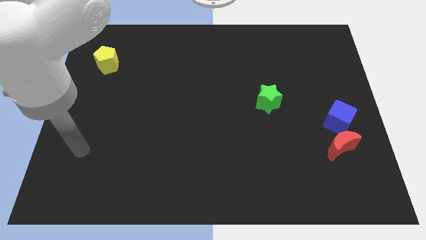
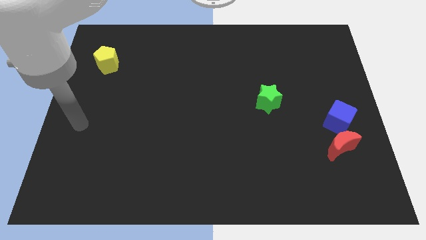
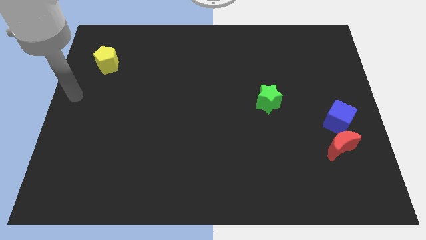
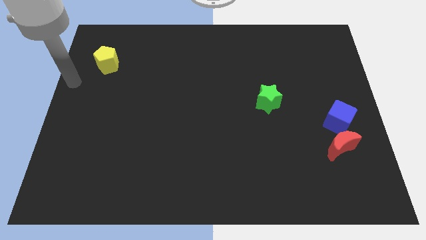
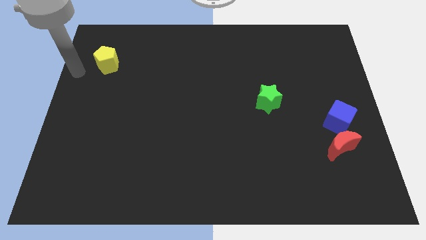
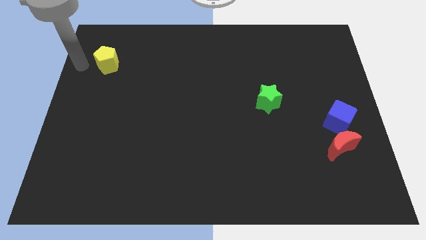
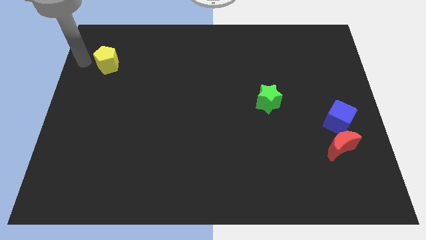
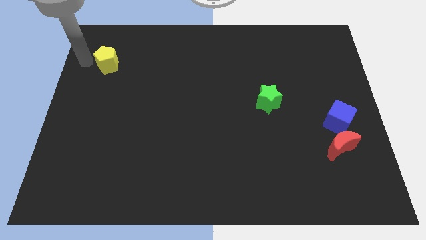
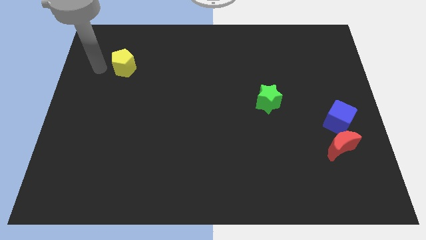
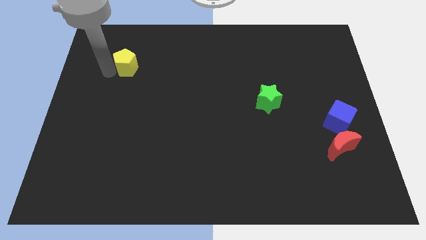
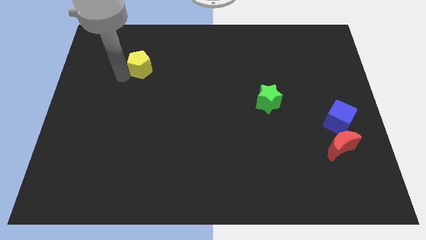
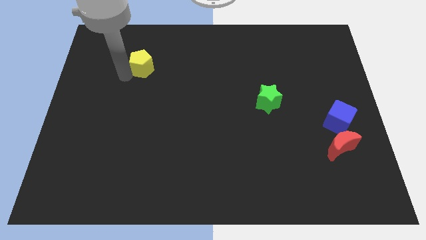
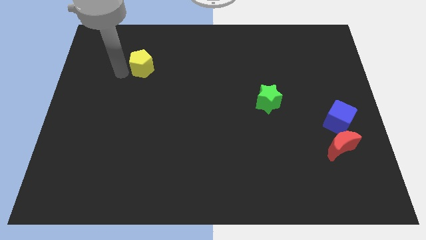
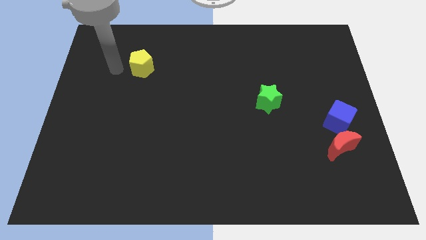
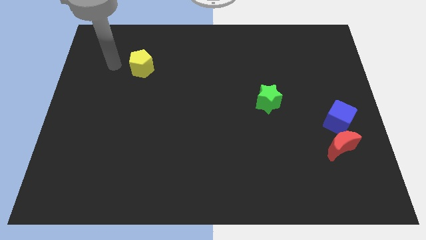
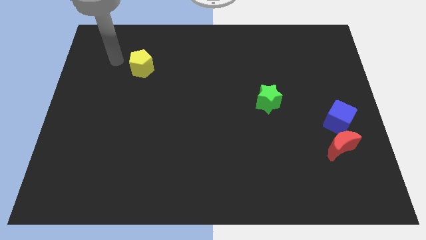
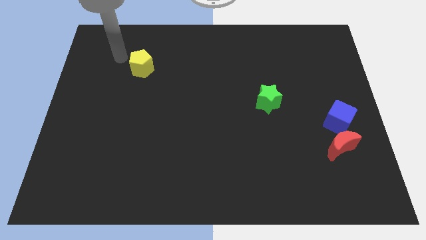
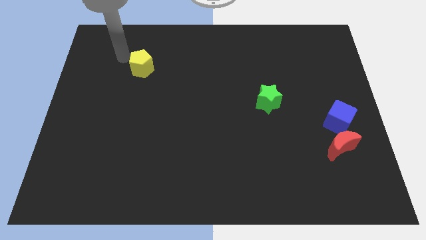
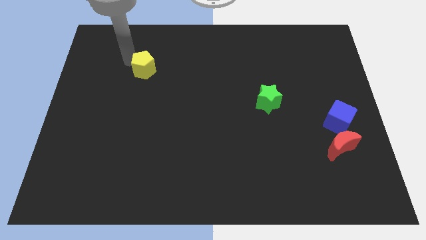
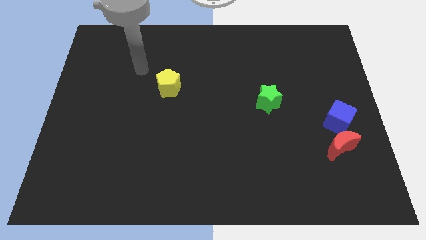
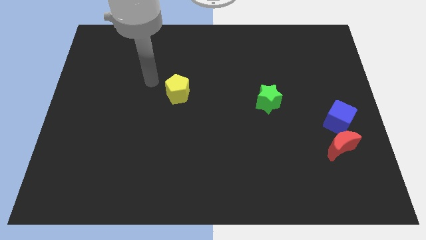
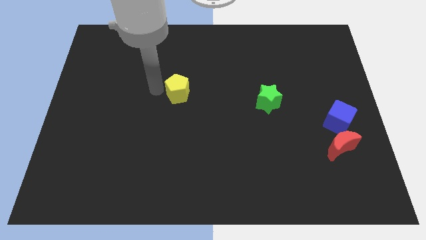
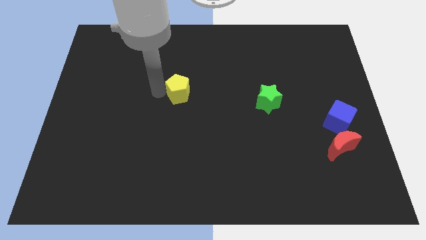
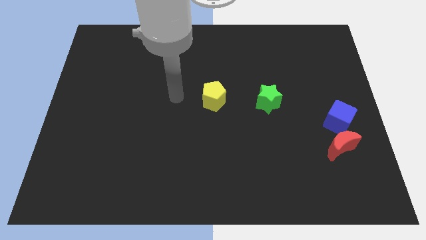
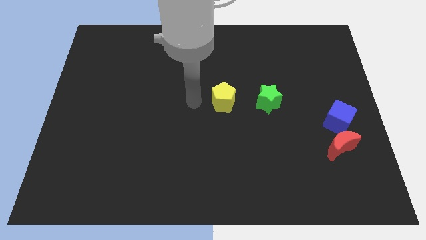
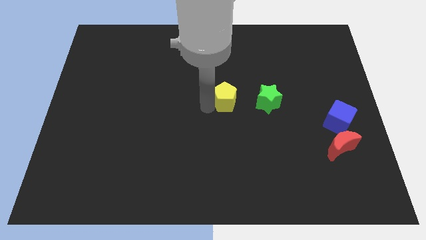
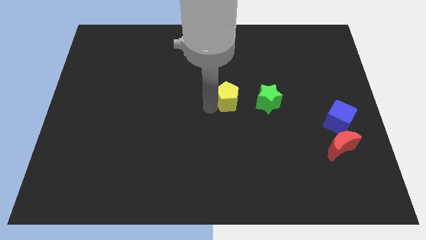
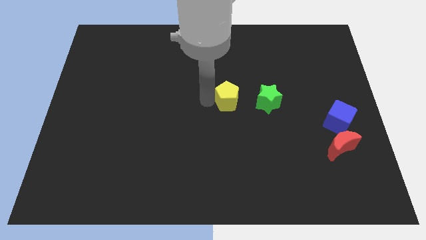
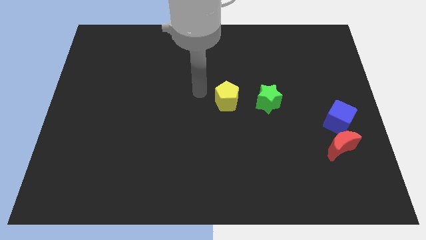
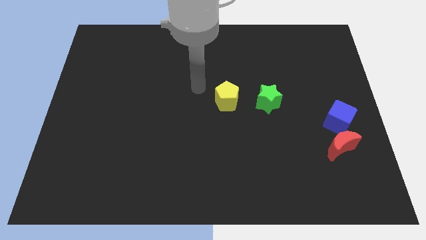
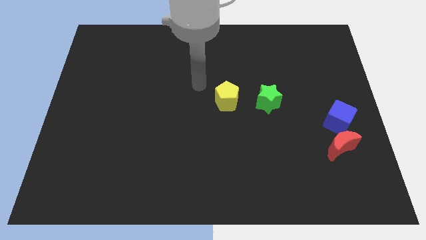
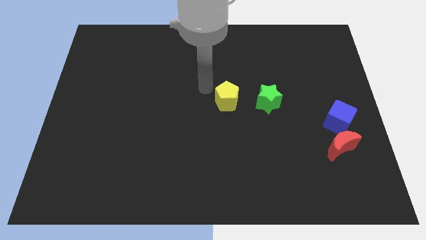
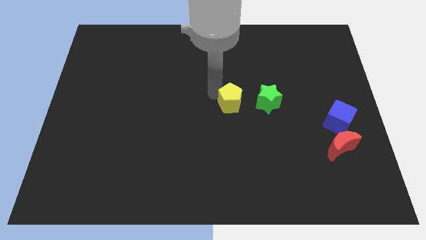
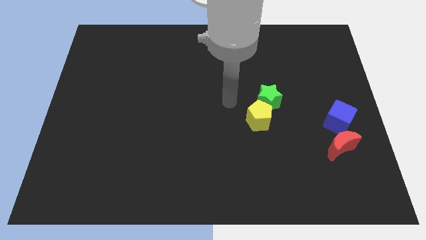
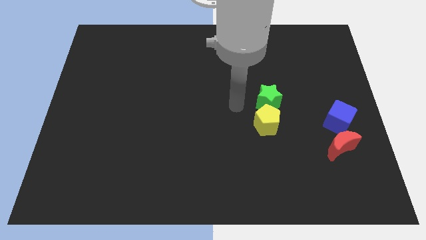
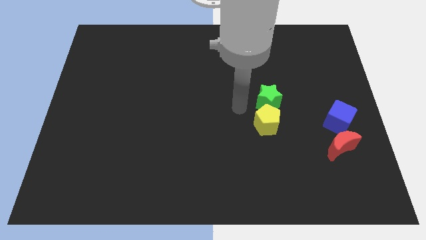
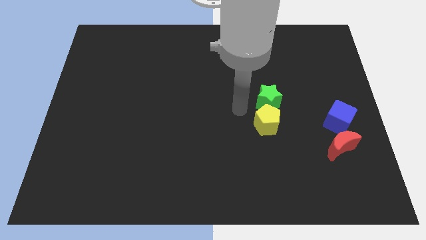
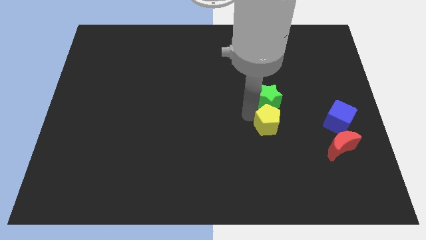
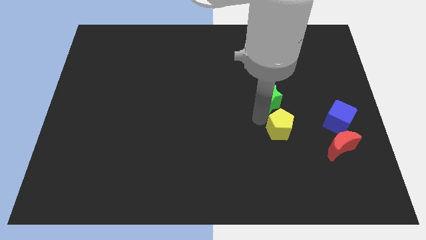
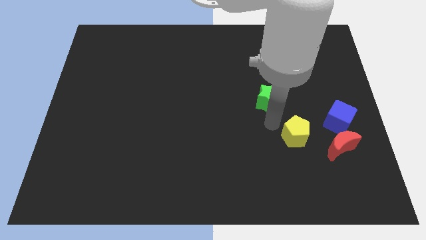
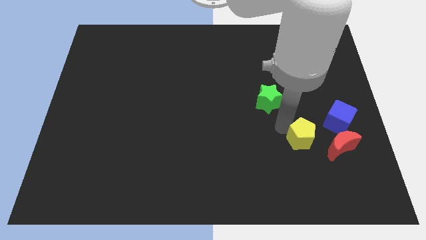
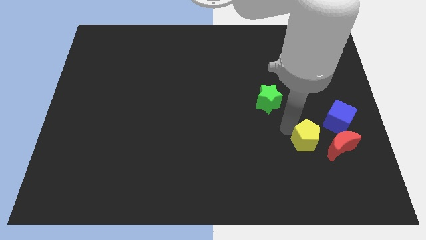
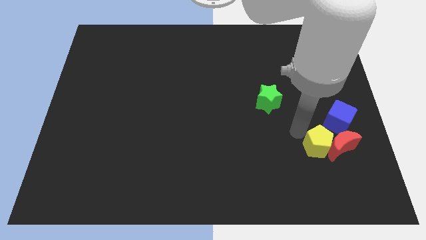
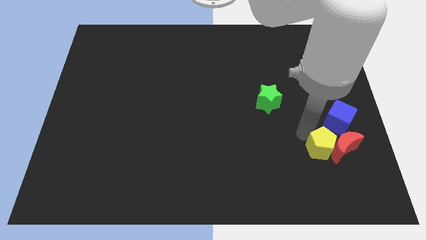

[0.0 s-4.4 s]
put the yellow block close to the red moon

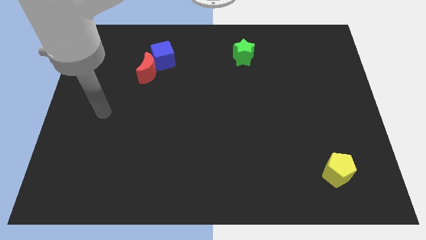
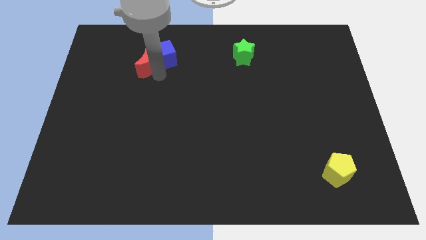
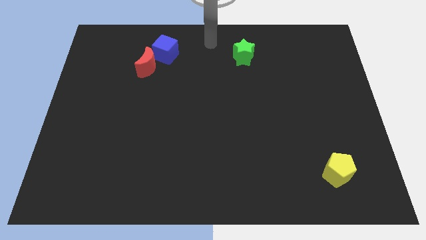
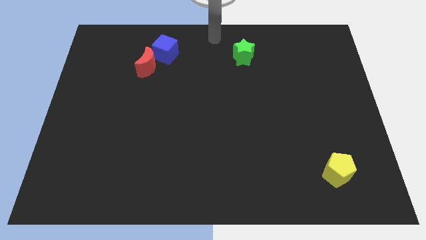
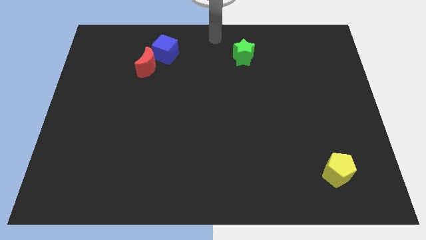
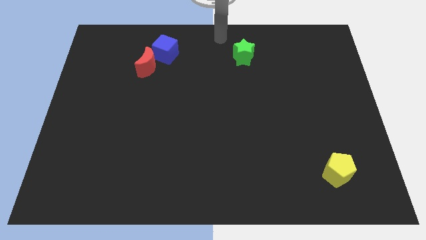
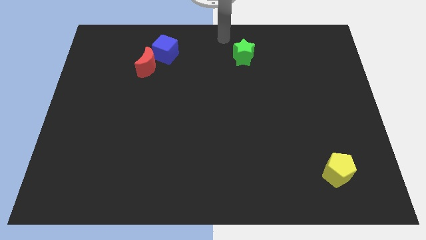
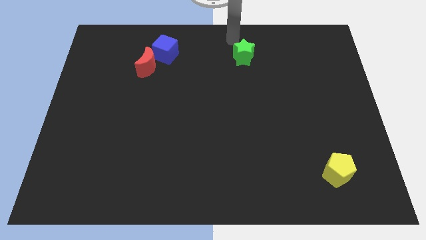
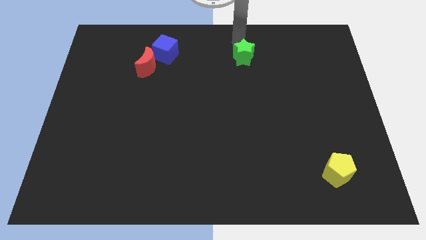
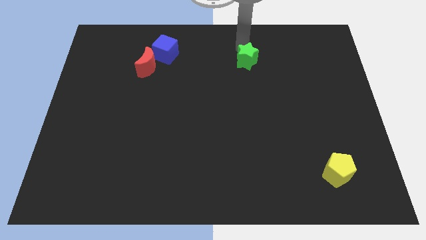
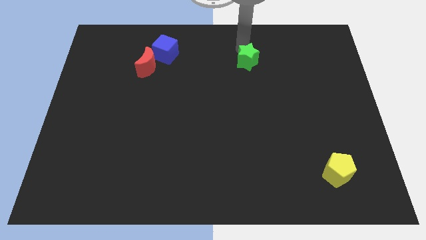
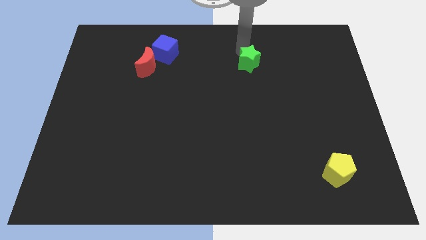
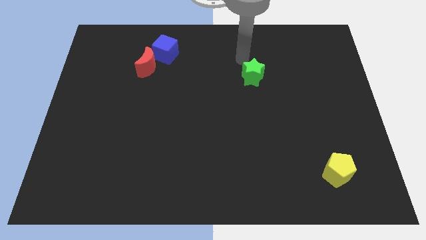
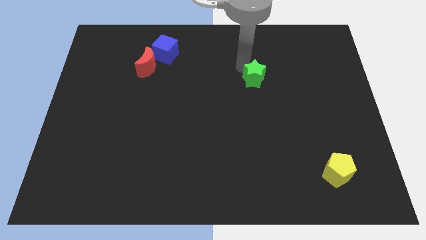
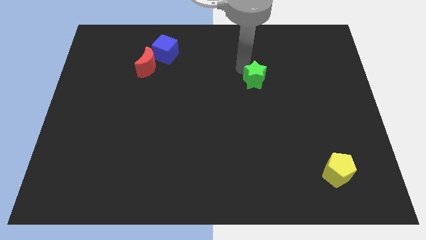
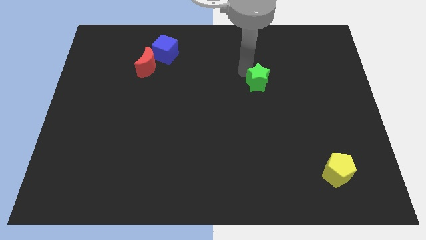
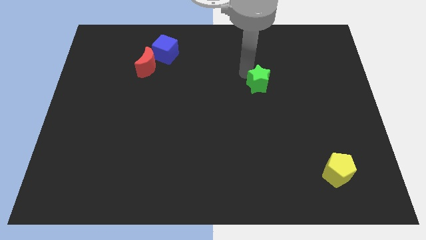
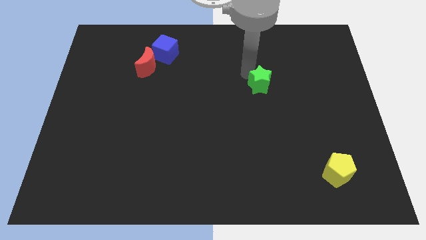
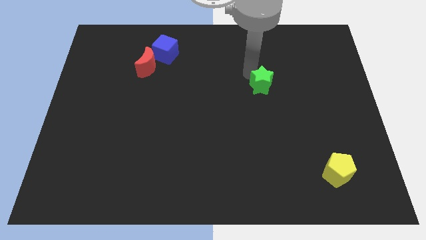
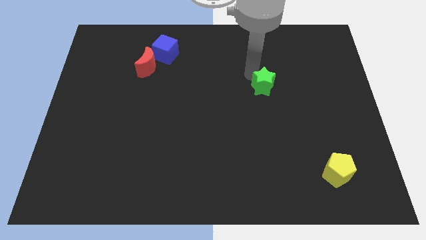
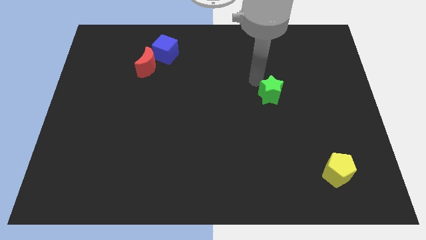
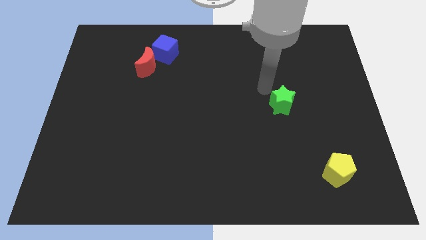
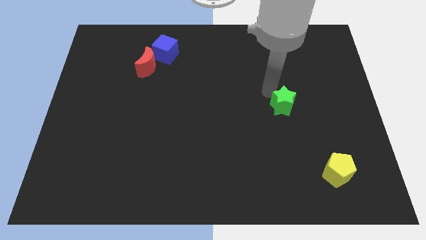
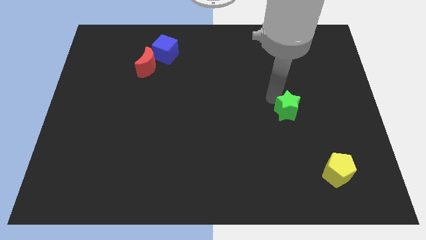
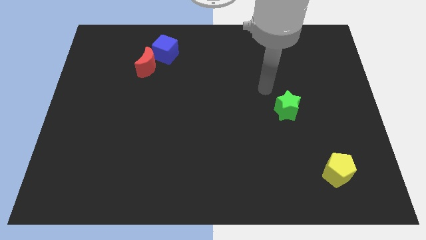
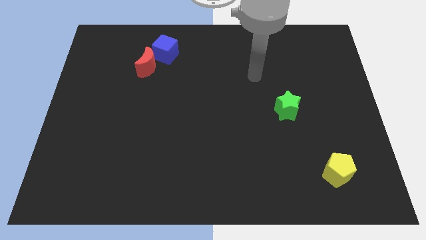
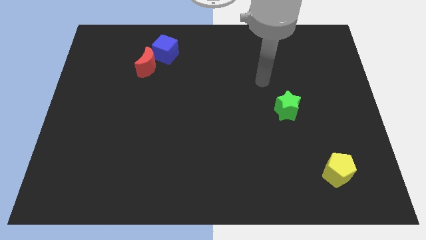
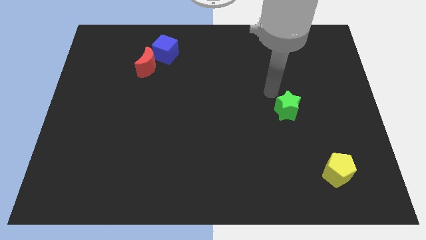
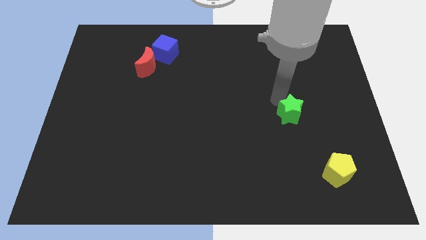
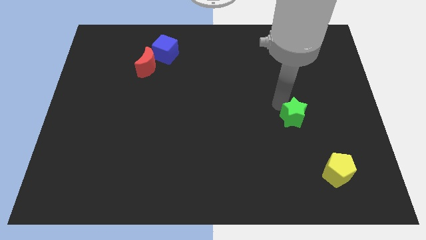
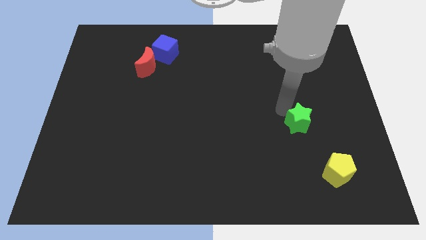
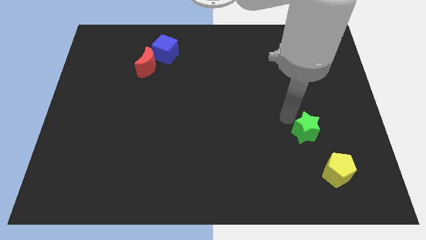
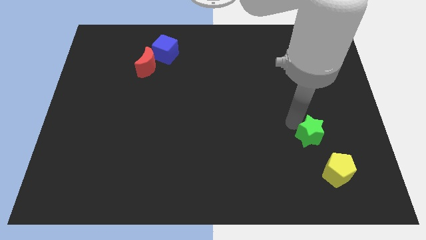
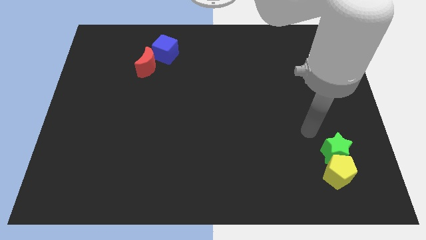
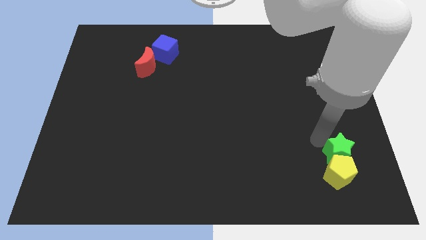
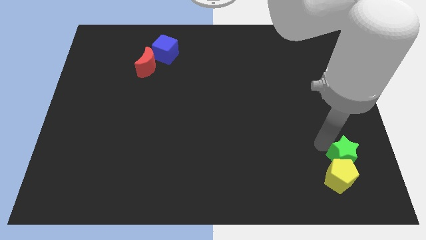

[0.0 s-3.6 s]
move the green star to the yellow pentagon

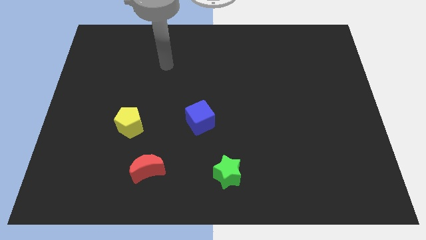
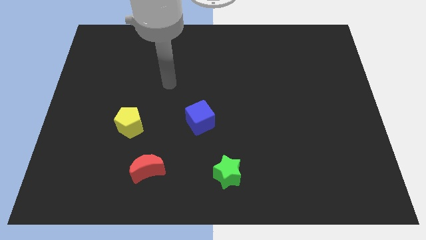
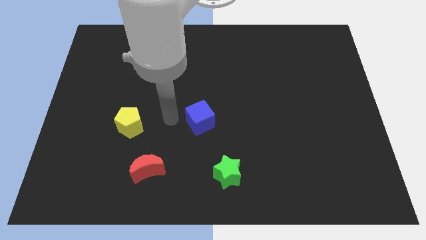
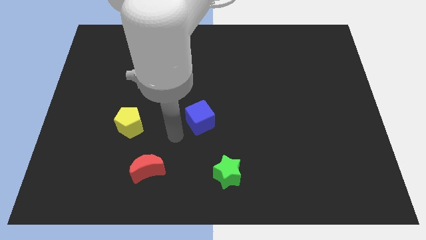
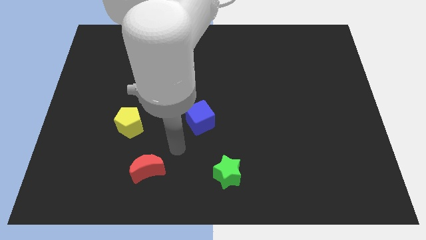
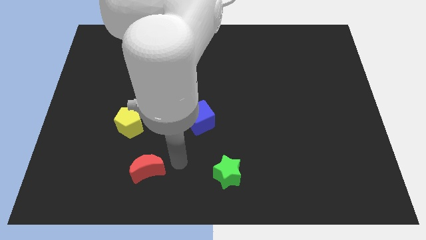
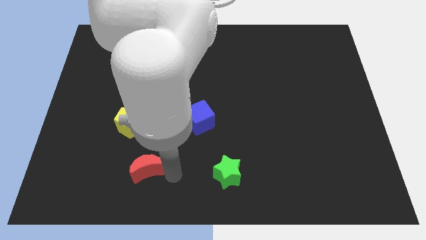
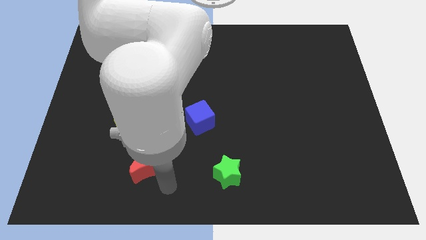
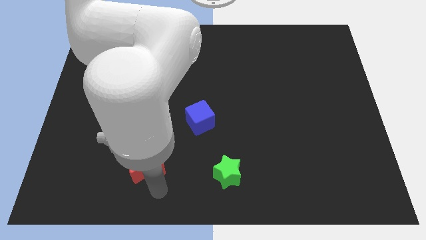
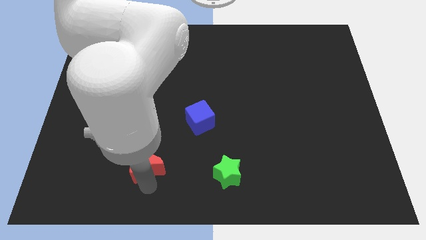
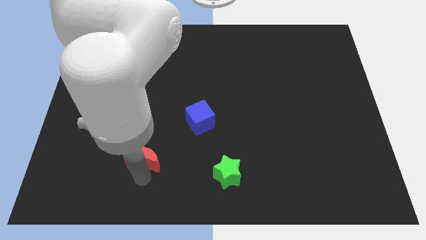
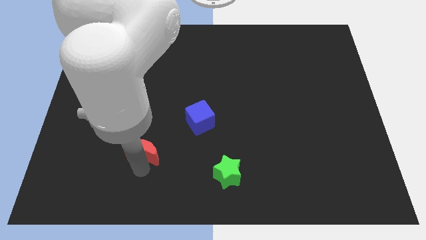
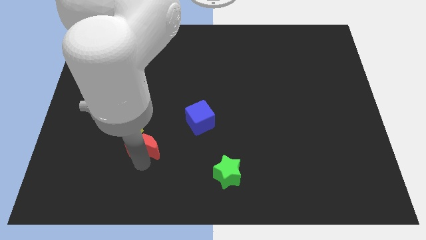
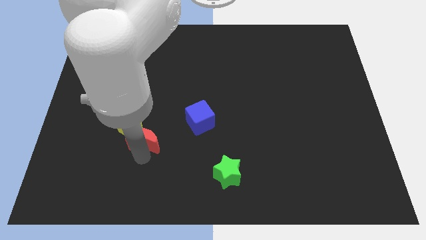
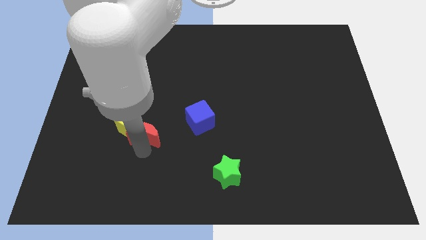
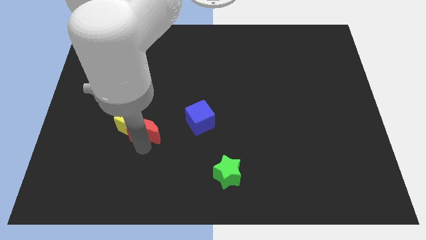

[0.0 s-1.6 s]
move the moon to the yellow pentagon
